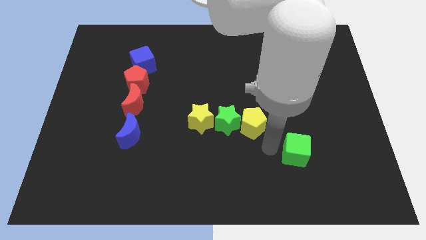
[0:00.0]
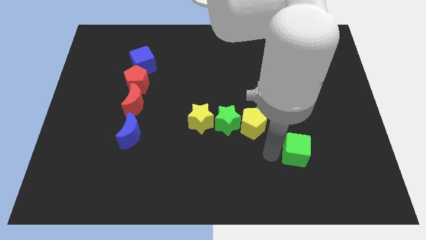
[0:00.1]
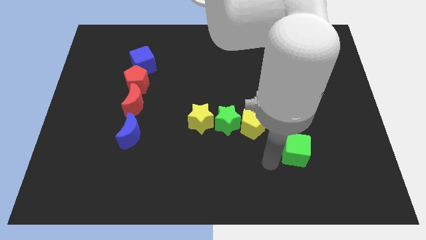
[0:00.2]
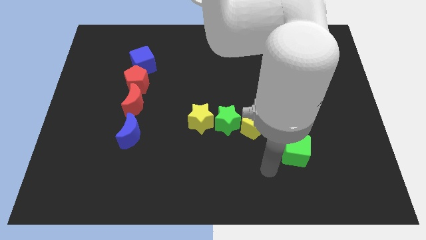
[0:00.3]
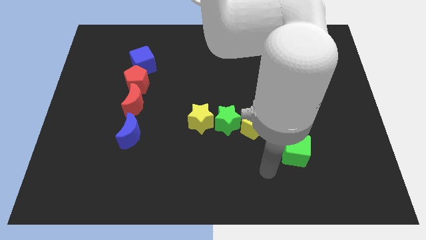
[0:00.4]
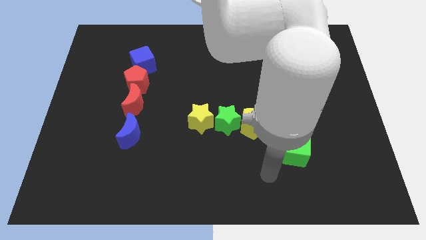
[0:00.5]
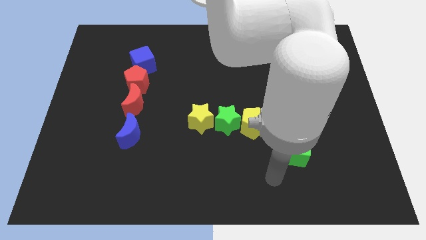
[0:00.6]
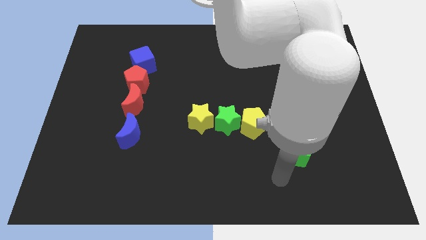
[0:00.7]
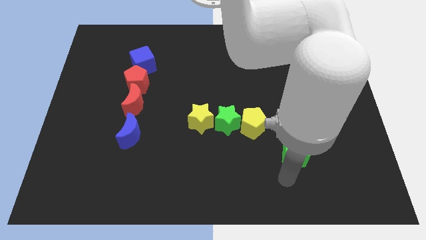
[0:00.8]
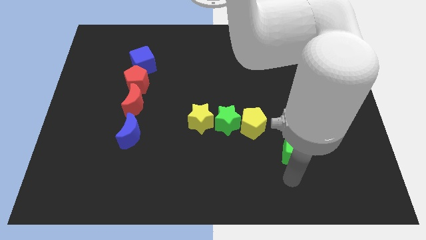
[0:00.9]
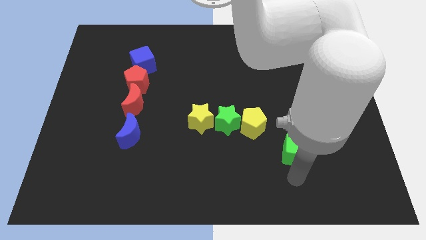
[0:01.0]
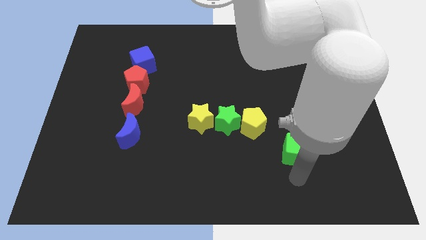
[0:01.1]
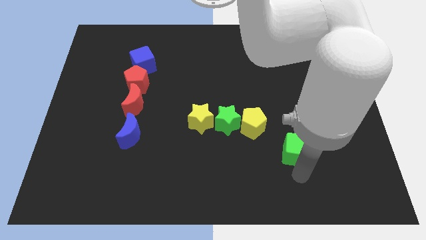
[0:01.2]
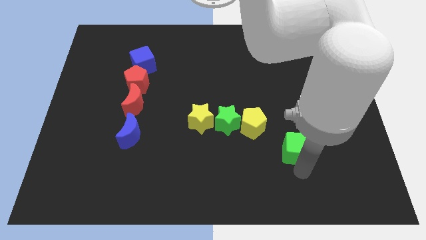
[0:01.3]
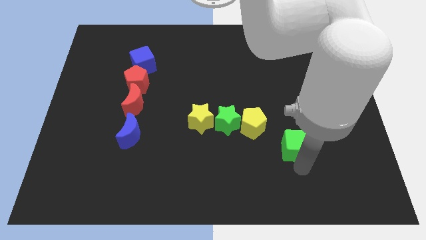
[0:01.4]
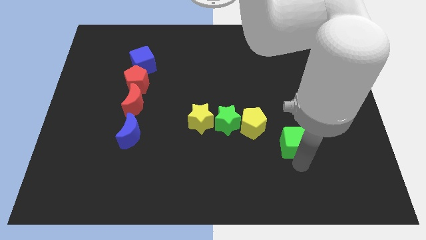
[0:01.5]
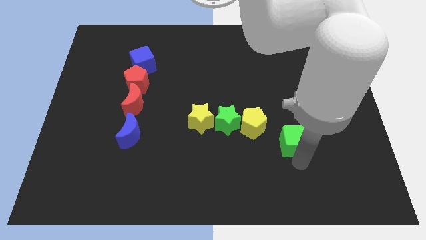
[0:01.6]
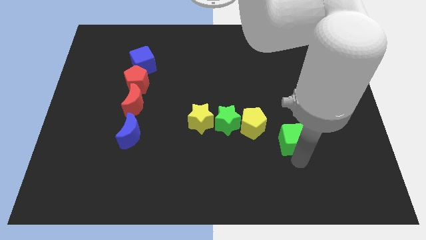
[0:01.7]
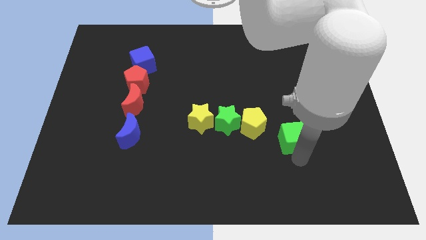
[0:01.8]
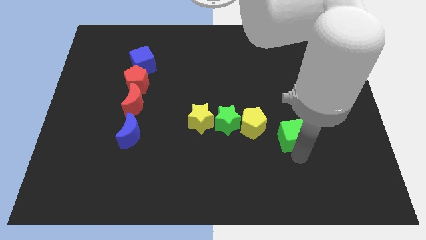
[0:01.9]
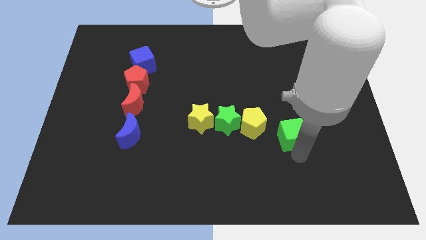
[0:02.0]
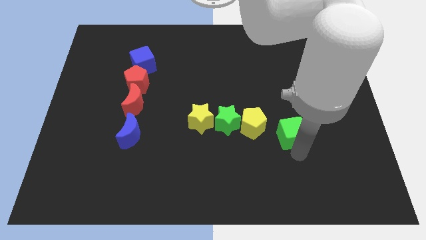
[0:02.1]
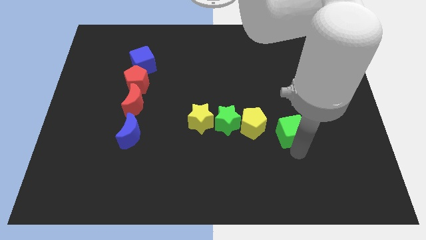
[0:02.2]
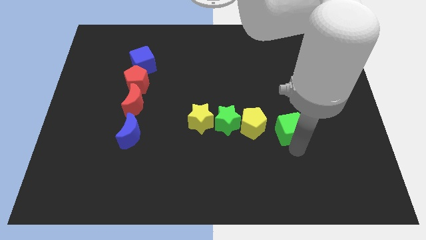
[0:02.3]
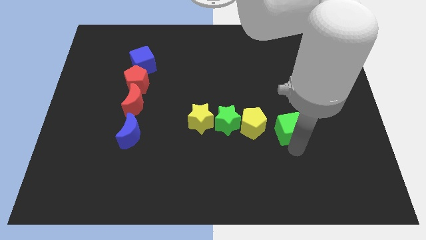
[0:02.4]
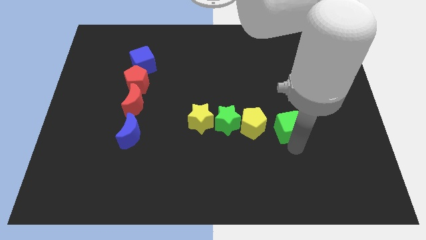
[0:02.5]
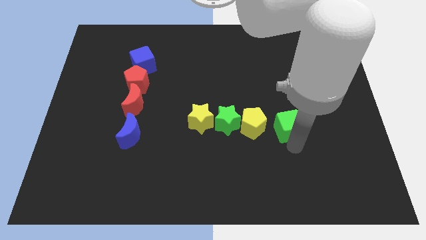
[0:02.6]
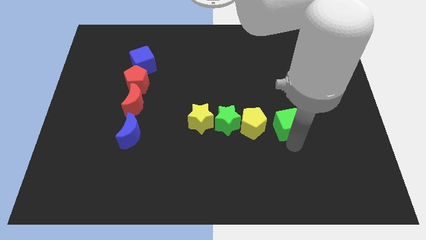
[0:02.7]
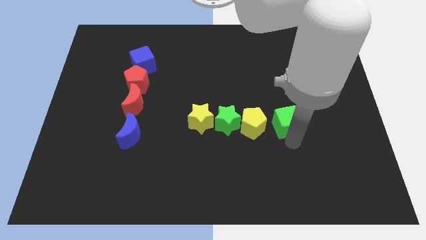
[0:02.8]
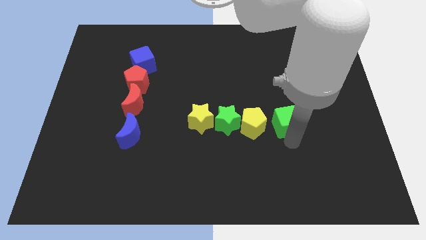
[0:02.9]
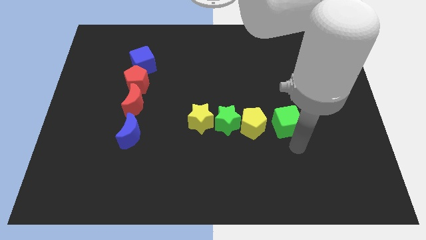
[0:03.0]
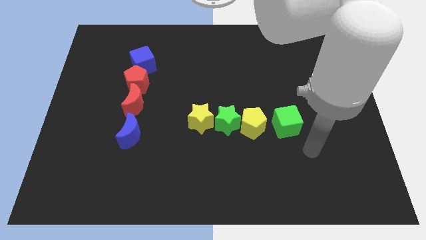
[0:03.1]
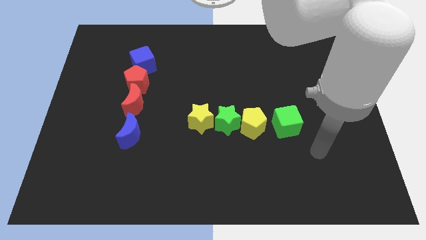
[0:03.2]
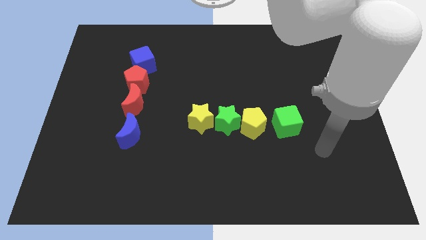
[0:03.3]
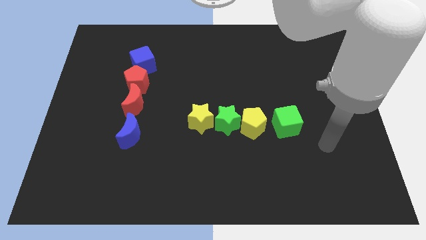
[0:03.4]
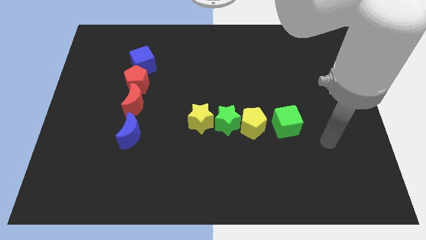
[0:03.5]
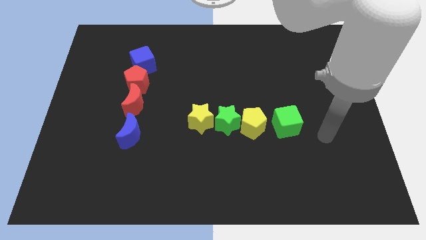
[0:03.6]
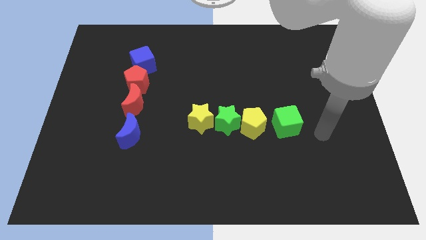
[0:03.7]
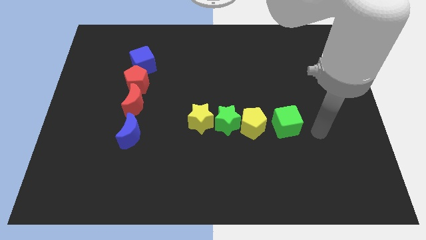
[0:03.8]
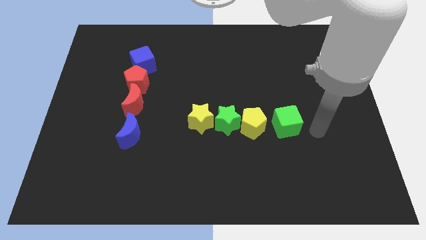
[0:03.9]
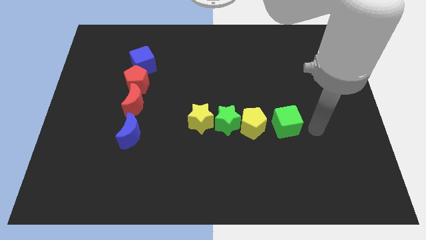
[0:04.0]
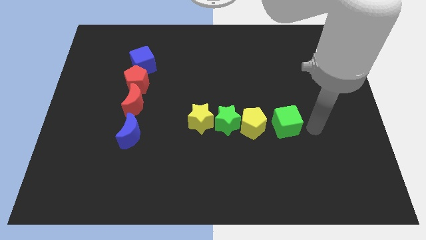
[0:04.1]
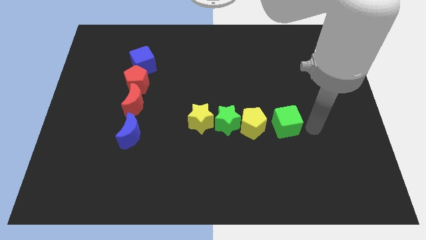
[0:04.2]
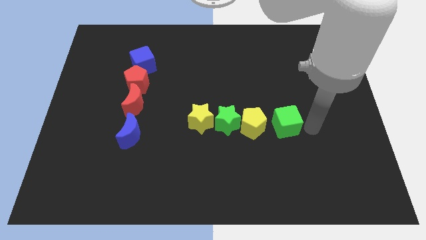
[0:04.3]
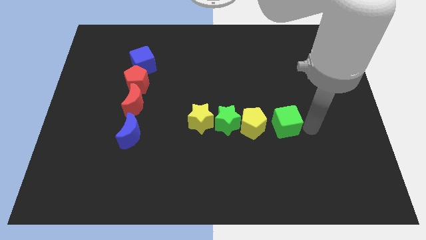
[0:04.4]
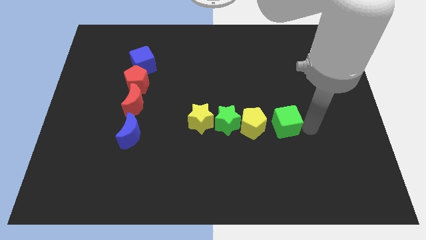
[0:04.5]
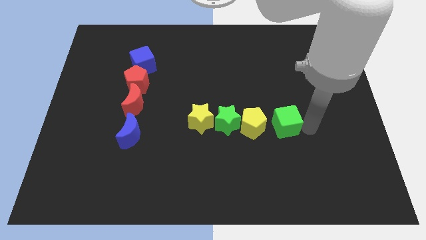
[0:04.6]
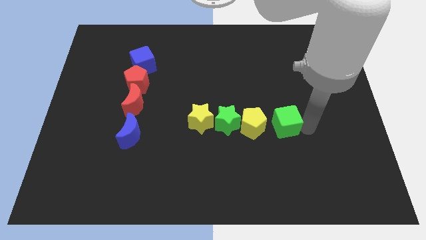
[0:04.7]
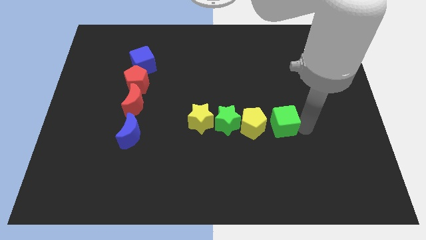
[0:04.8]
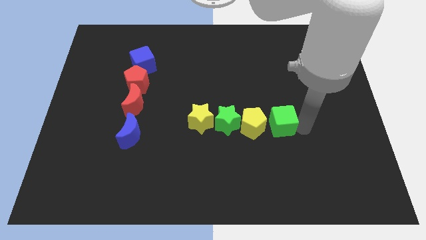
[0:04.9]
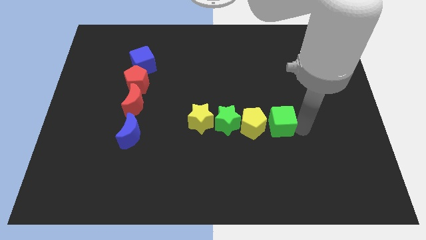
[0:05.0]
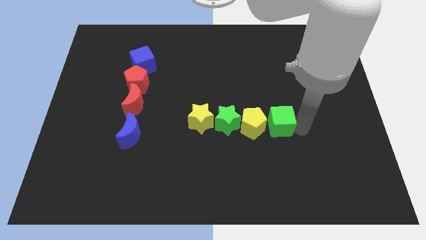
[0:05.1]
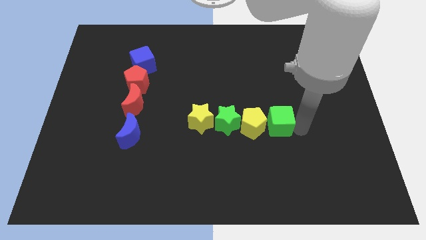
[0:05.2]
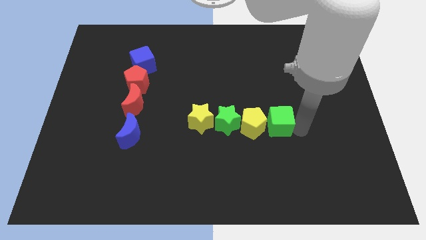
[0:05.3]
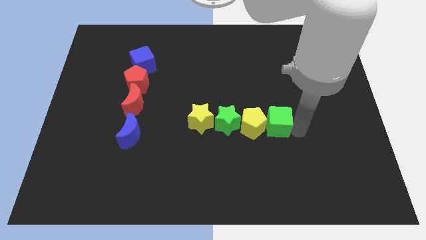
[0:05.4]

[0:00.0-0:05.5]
move the green cube right beside pentagon

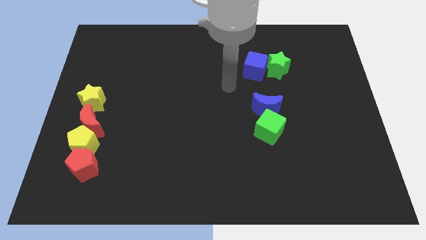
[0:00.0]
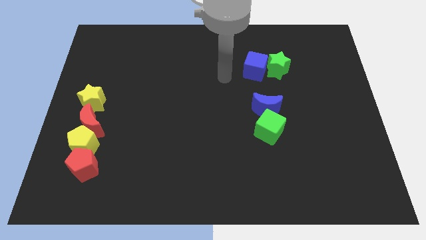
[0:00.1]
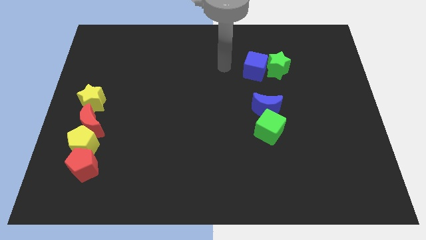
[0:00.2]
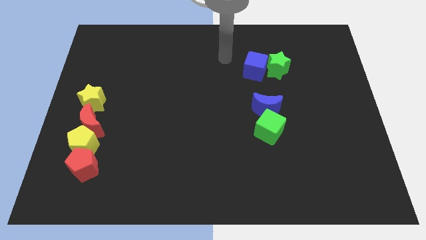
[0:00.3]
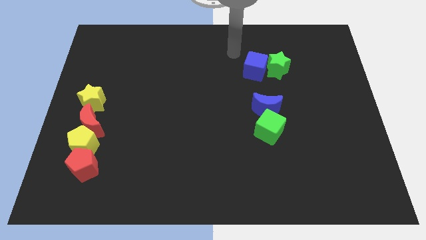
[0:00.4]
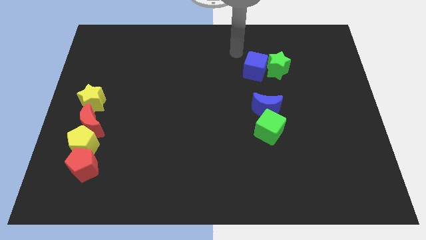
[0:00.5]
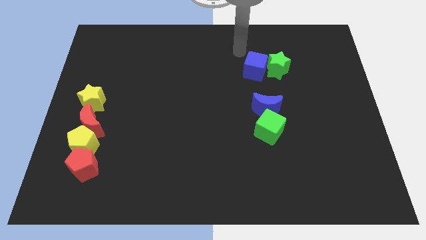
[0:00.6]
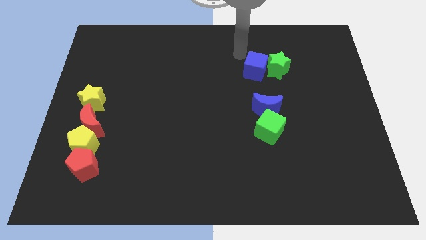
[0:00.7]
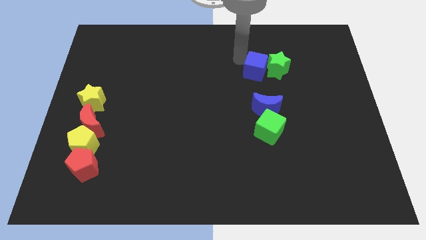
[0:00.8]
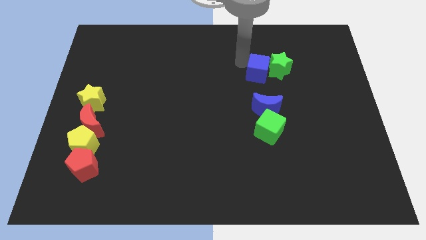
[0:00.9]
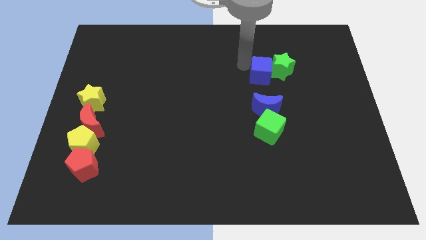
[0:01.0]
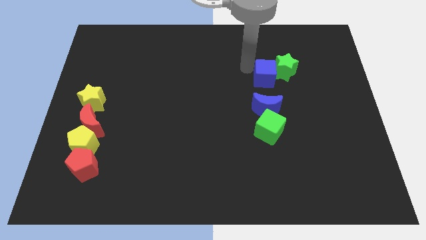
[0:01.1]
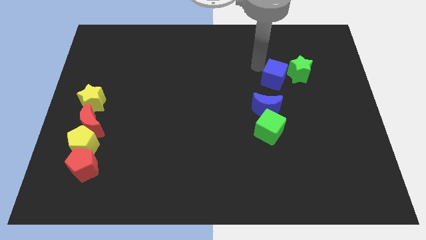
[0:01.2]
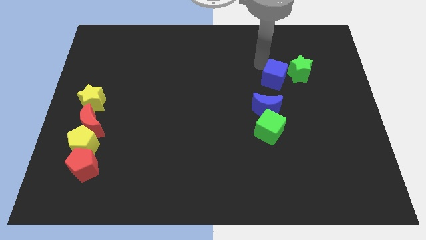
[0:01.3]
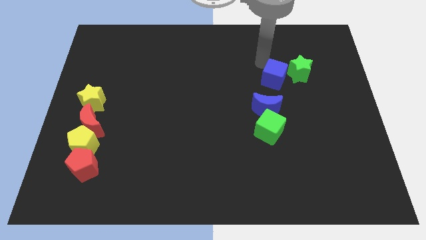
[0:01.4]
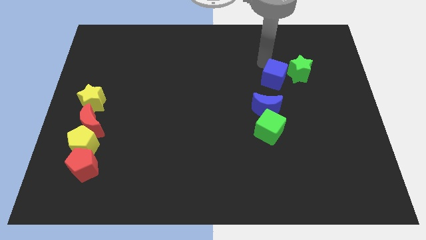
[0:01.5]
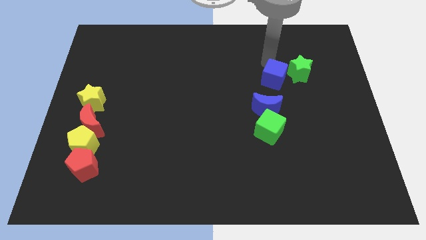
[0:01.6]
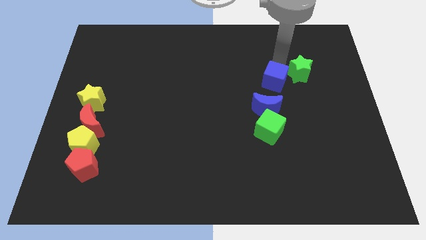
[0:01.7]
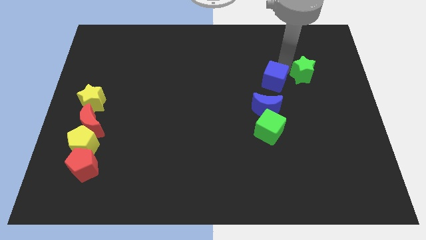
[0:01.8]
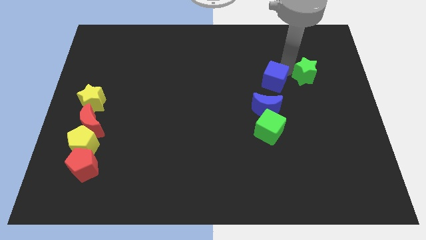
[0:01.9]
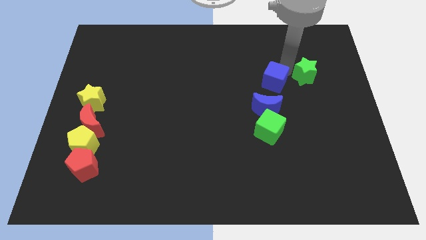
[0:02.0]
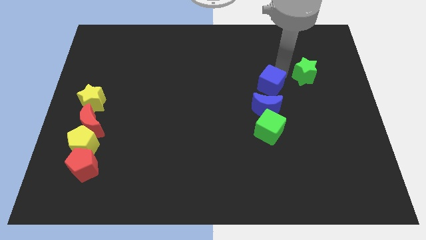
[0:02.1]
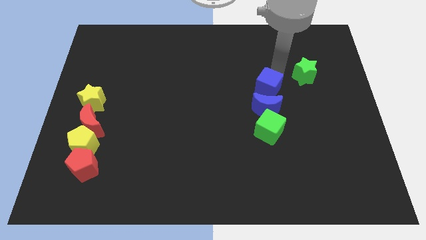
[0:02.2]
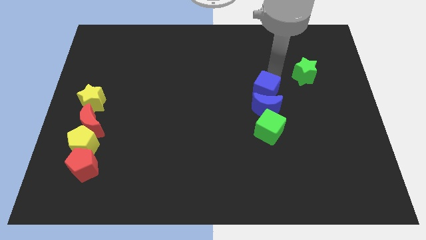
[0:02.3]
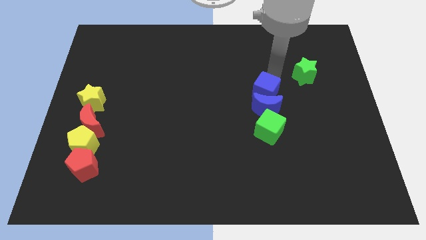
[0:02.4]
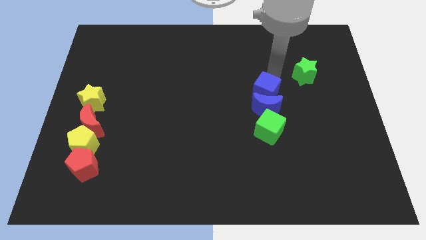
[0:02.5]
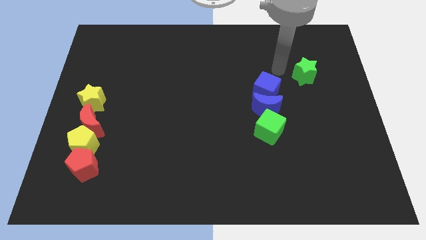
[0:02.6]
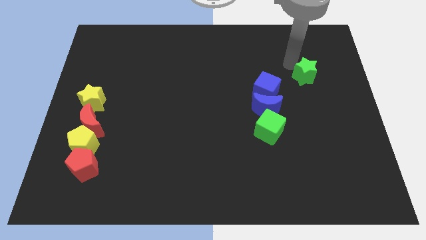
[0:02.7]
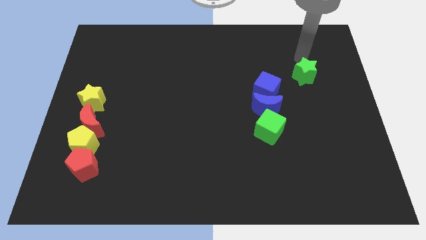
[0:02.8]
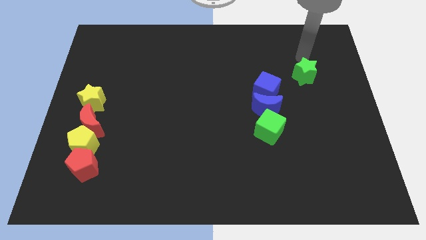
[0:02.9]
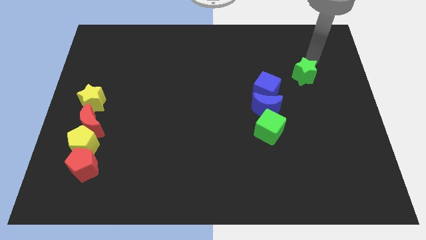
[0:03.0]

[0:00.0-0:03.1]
push blue cube towards blue moon

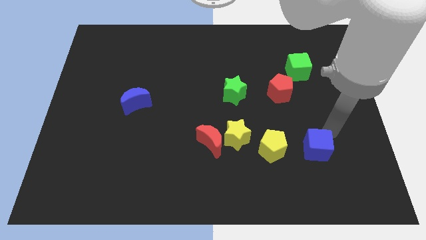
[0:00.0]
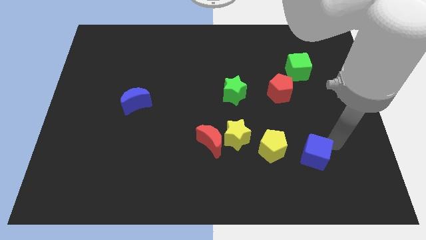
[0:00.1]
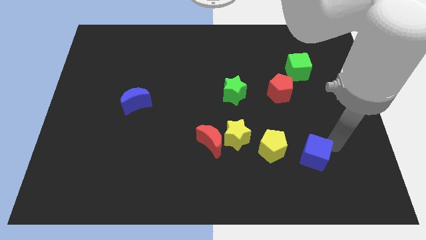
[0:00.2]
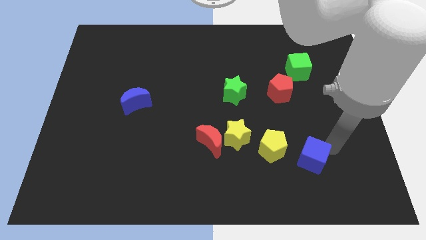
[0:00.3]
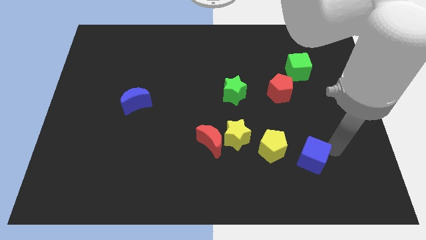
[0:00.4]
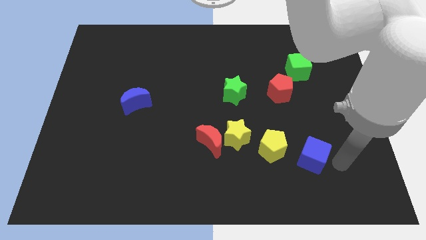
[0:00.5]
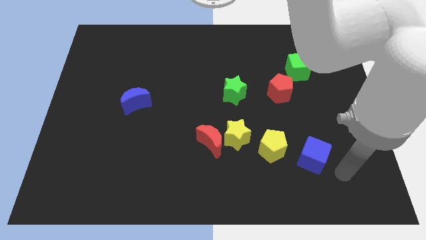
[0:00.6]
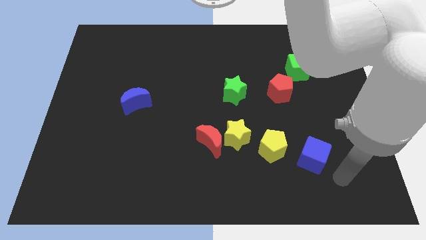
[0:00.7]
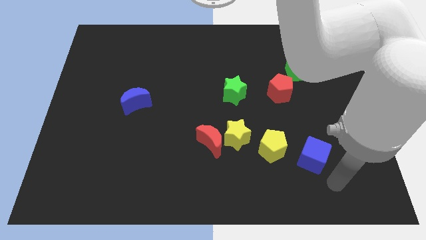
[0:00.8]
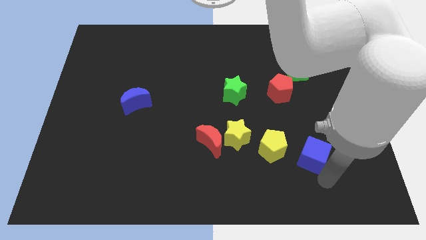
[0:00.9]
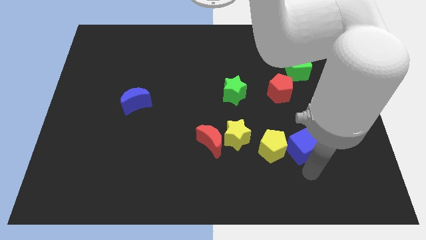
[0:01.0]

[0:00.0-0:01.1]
push the blue cube into the yellow pentagon
